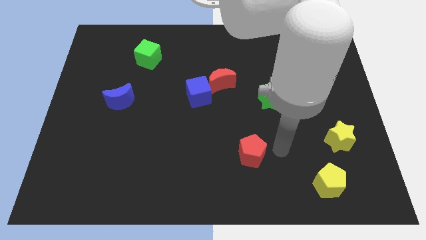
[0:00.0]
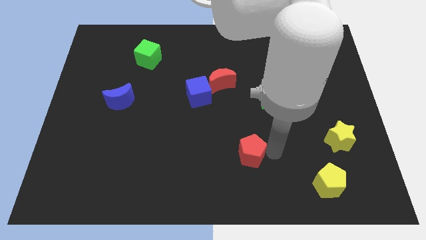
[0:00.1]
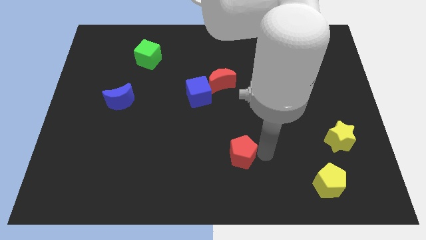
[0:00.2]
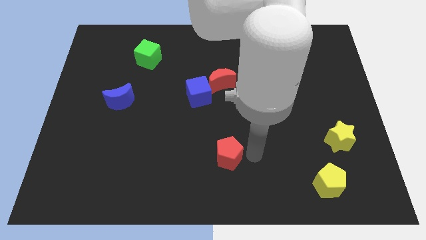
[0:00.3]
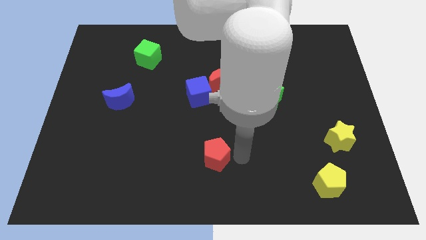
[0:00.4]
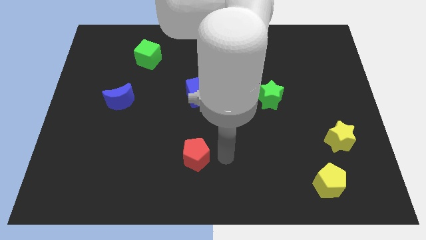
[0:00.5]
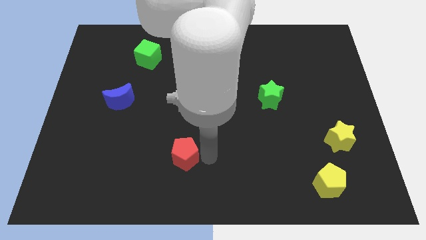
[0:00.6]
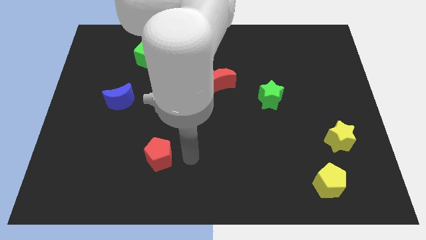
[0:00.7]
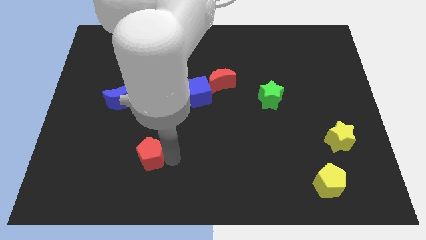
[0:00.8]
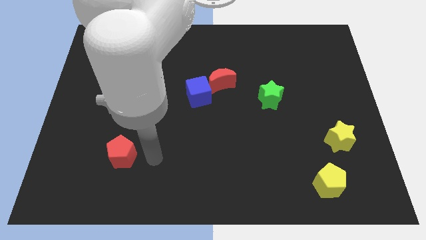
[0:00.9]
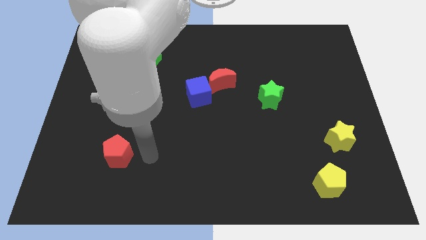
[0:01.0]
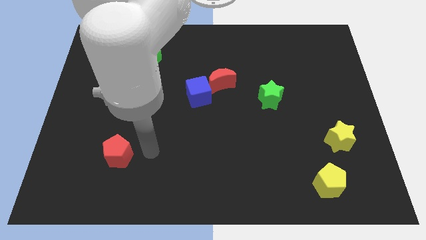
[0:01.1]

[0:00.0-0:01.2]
slide red pentagon below blue moon

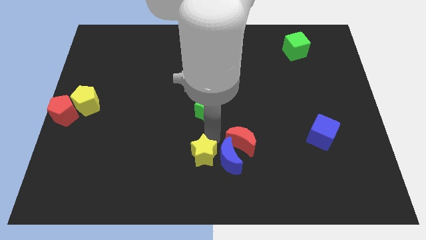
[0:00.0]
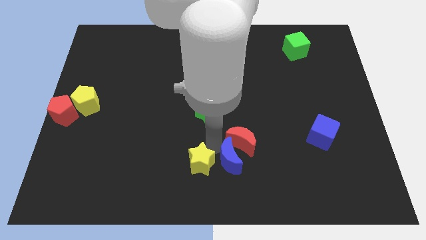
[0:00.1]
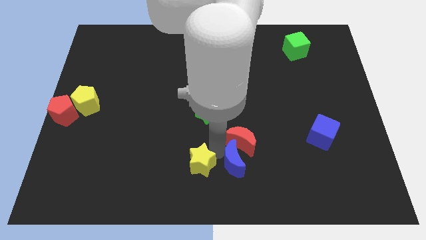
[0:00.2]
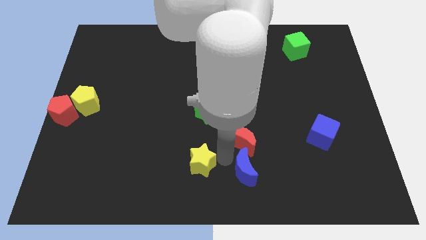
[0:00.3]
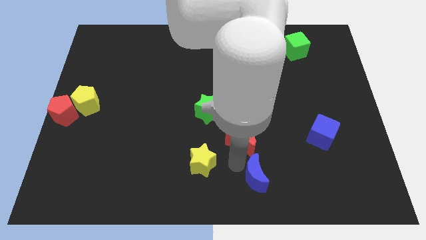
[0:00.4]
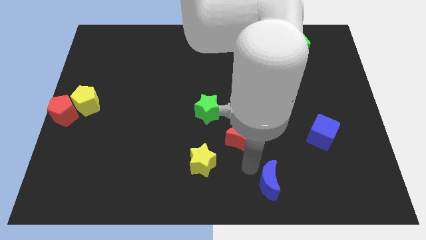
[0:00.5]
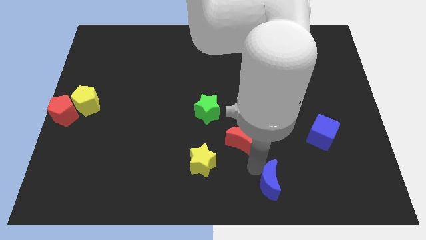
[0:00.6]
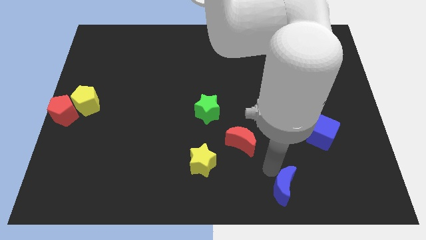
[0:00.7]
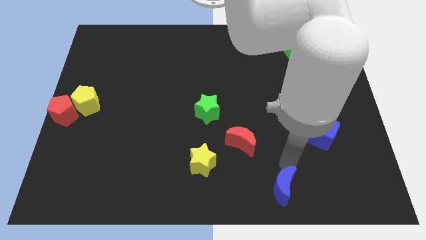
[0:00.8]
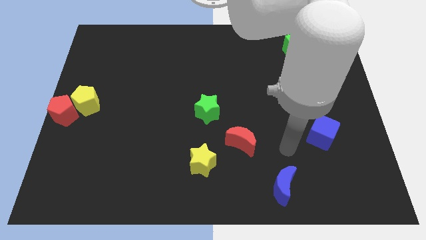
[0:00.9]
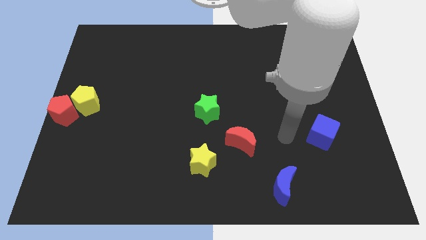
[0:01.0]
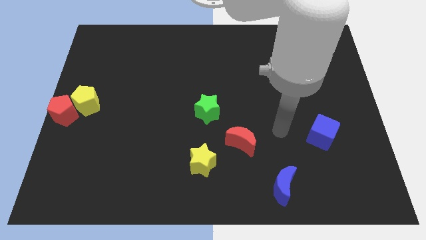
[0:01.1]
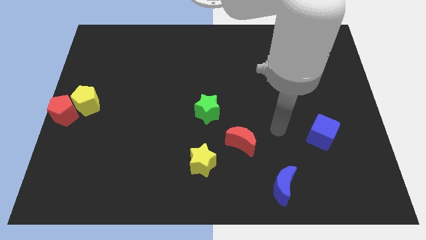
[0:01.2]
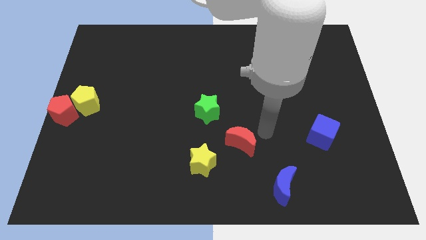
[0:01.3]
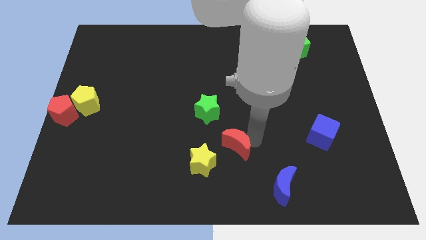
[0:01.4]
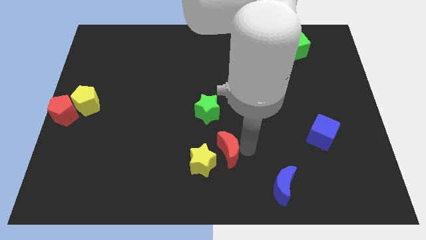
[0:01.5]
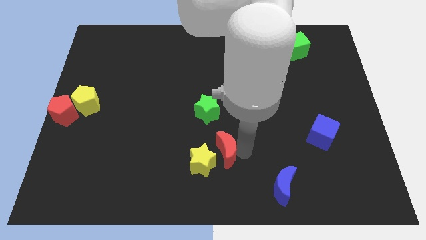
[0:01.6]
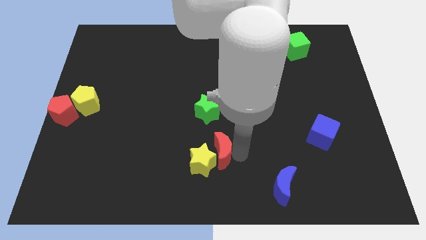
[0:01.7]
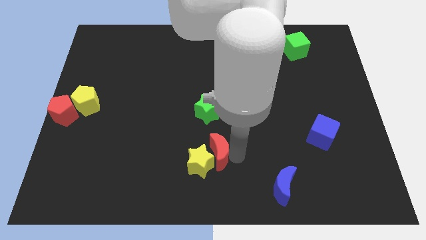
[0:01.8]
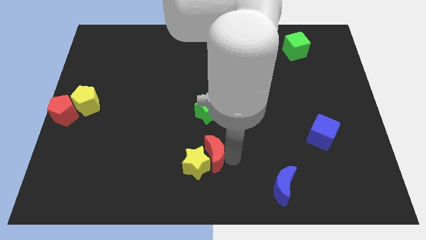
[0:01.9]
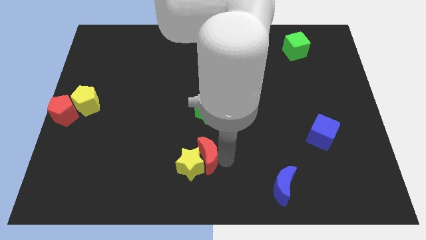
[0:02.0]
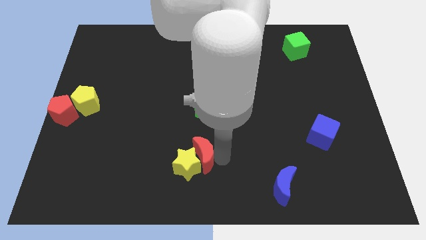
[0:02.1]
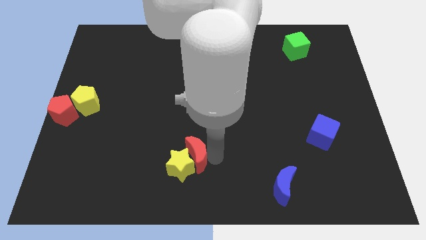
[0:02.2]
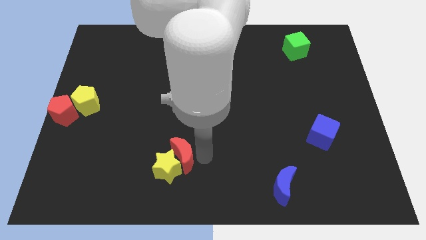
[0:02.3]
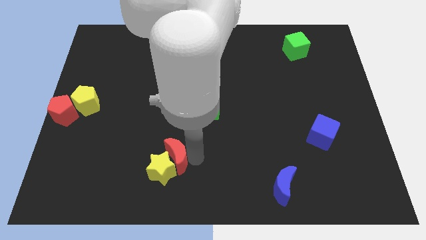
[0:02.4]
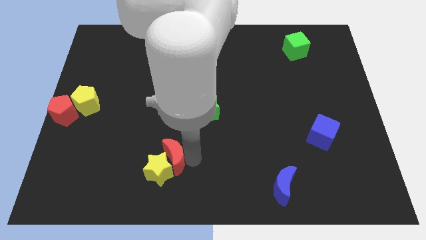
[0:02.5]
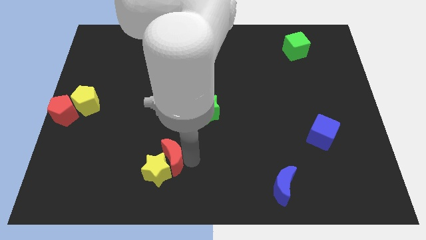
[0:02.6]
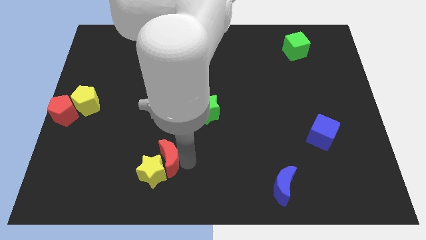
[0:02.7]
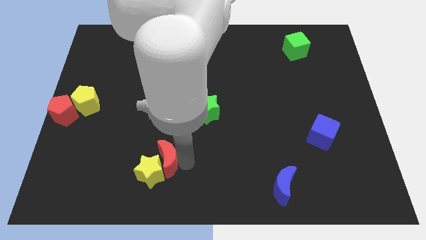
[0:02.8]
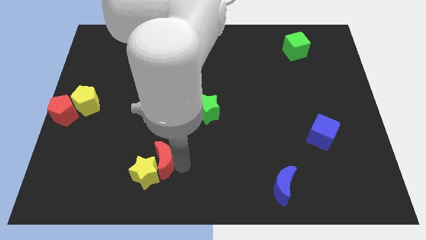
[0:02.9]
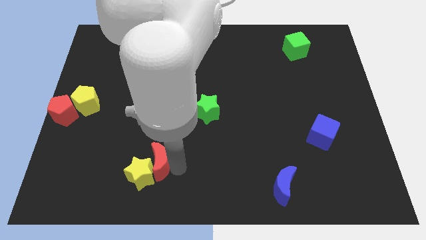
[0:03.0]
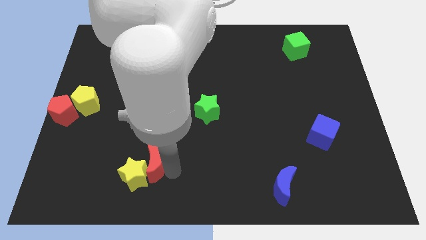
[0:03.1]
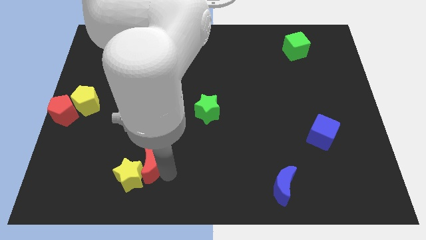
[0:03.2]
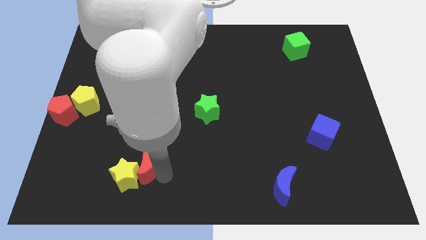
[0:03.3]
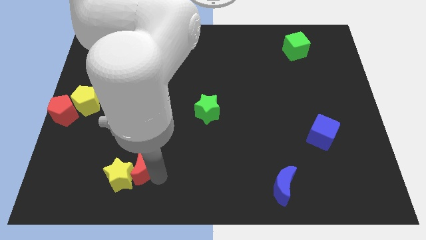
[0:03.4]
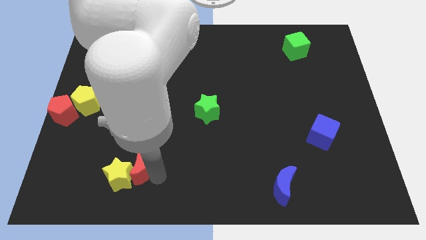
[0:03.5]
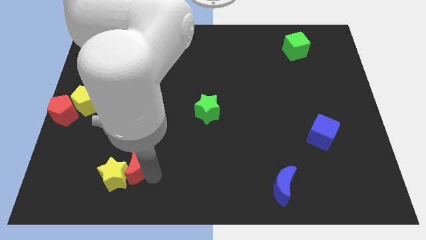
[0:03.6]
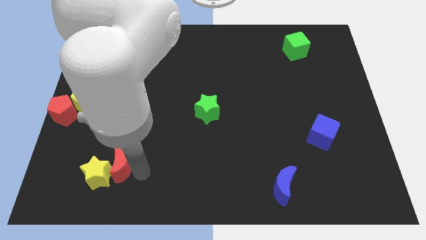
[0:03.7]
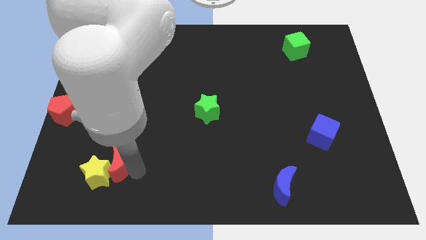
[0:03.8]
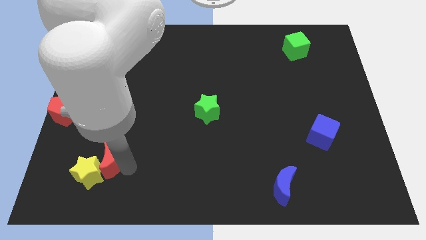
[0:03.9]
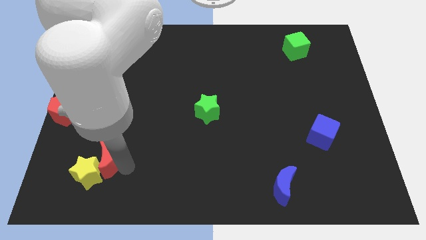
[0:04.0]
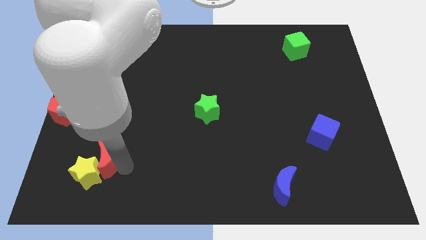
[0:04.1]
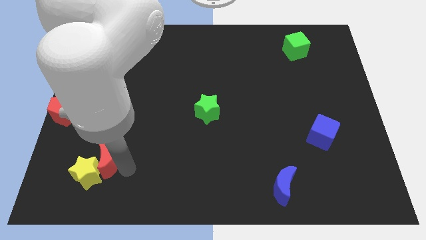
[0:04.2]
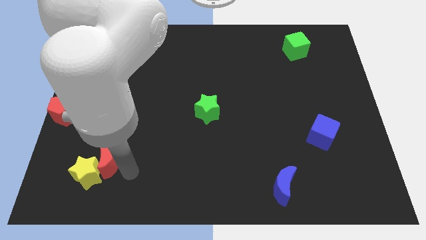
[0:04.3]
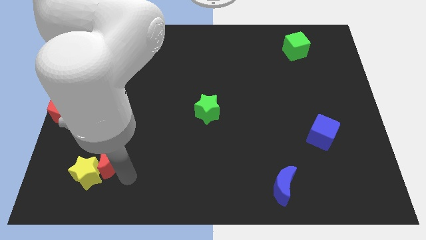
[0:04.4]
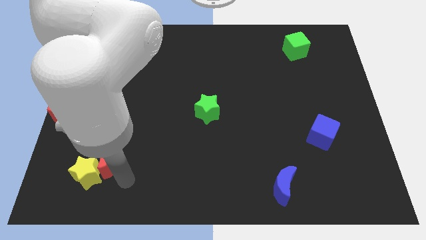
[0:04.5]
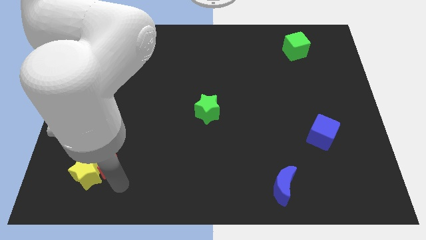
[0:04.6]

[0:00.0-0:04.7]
push the red moon into the yellow star

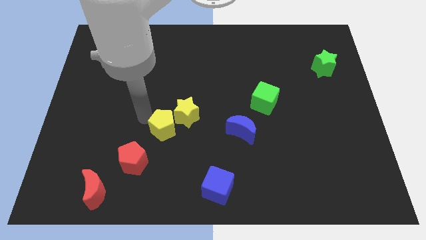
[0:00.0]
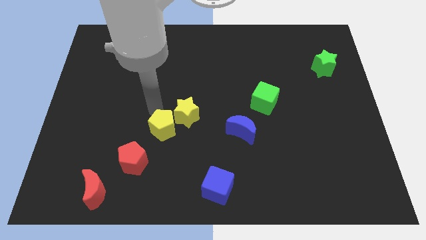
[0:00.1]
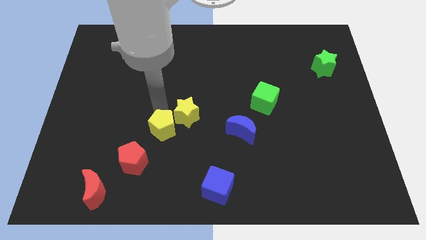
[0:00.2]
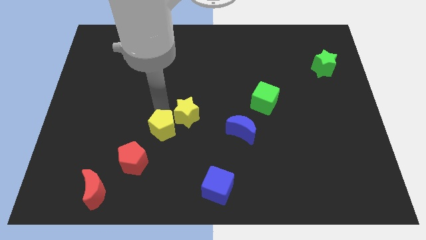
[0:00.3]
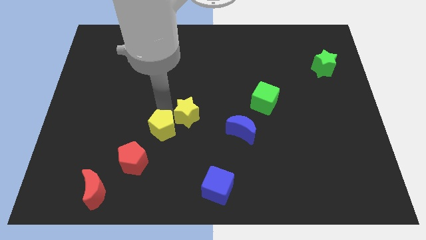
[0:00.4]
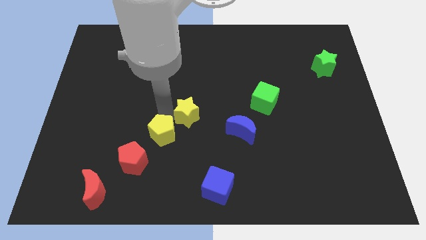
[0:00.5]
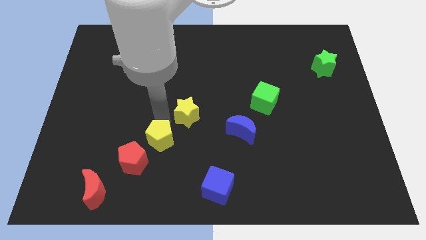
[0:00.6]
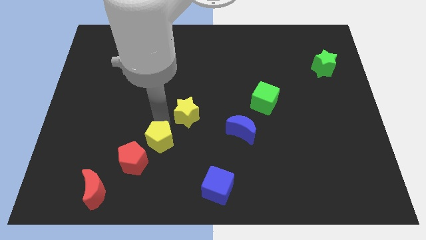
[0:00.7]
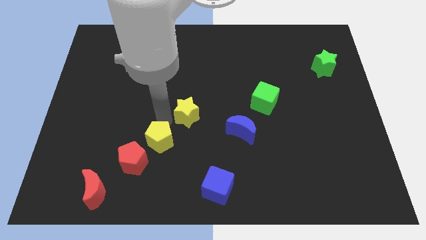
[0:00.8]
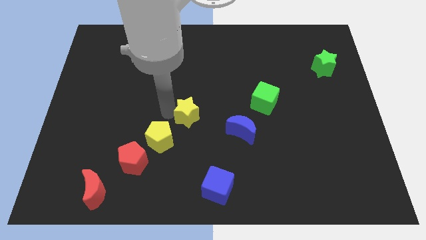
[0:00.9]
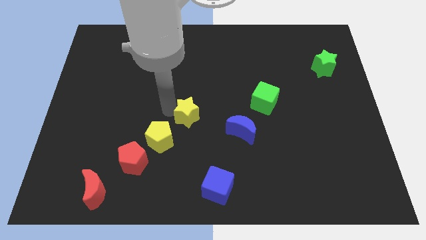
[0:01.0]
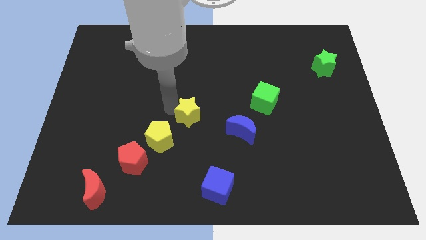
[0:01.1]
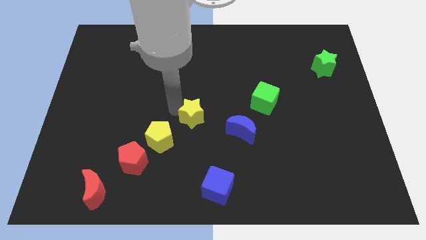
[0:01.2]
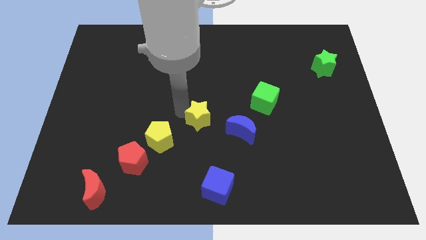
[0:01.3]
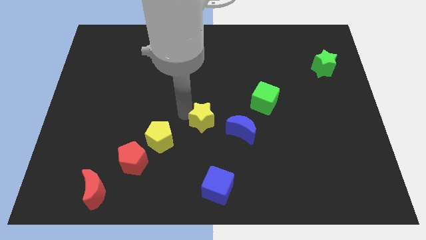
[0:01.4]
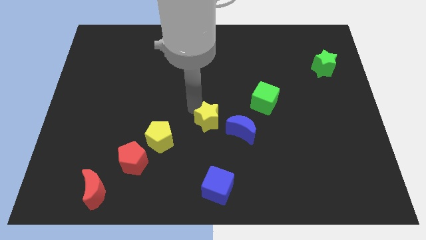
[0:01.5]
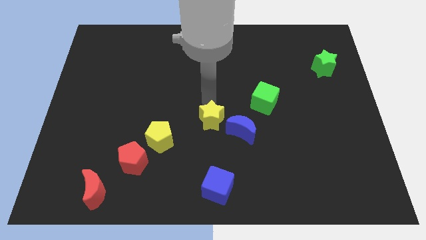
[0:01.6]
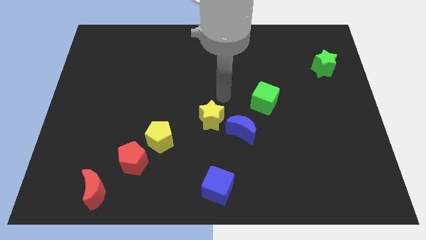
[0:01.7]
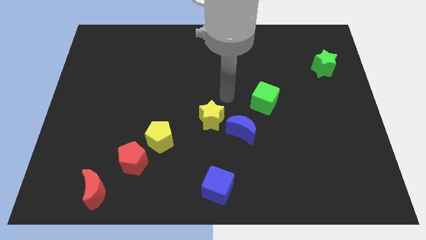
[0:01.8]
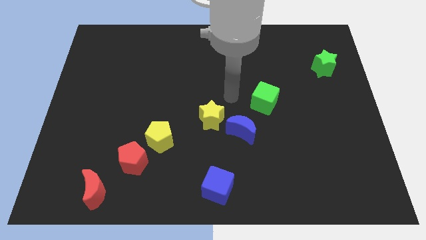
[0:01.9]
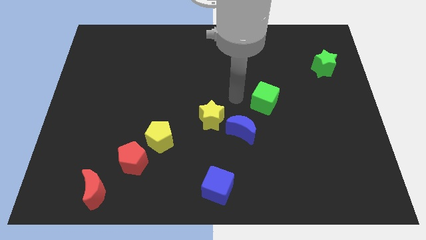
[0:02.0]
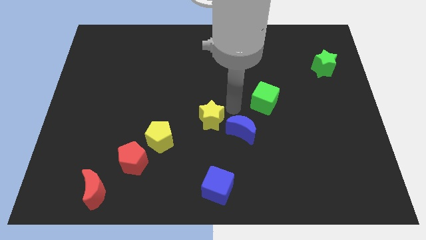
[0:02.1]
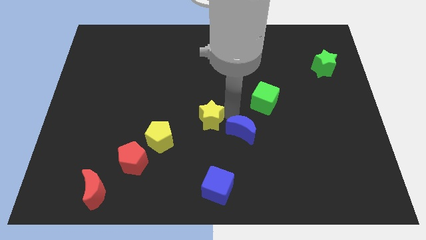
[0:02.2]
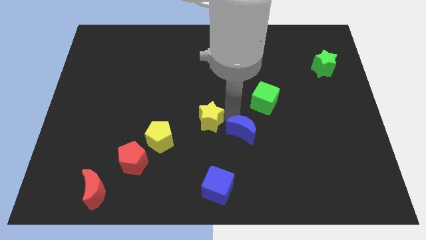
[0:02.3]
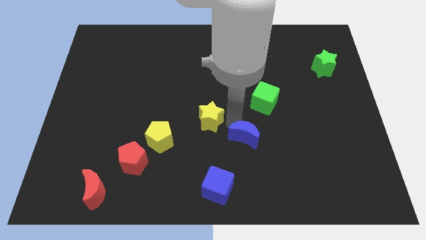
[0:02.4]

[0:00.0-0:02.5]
move the yellow star away from the yellow pentagon

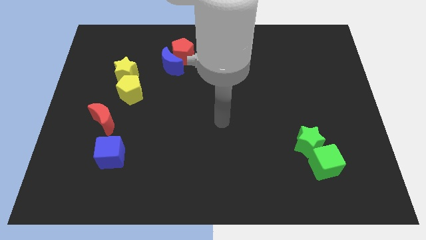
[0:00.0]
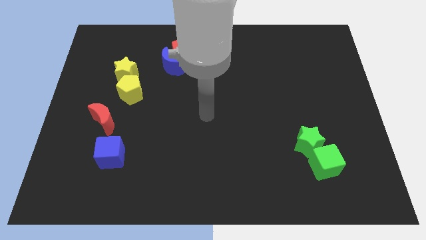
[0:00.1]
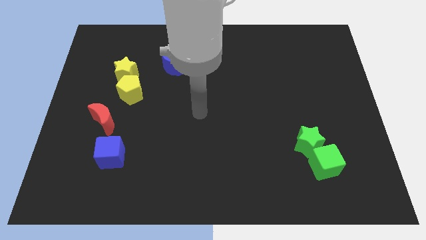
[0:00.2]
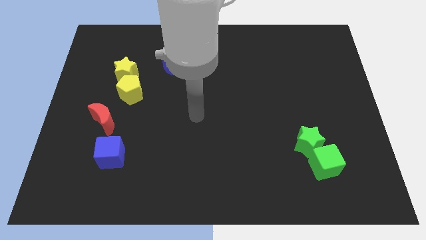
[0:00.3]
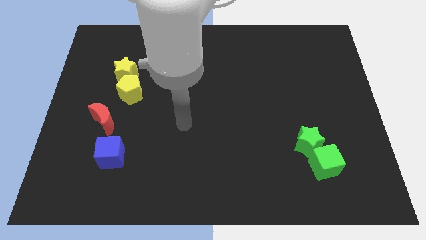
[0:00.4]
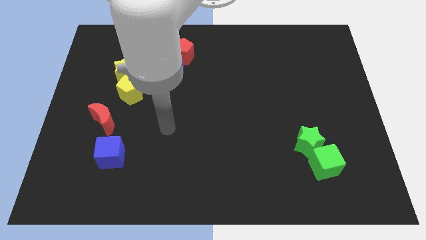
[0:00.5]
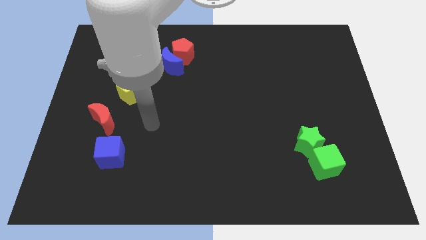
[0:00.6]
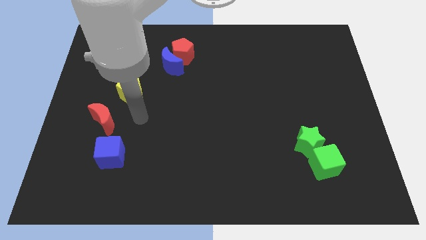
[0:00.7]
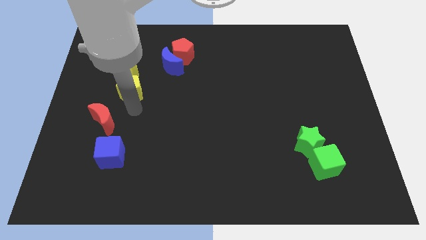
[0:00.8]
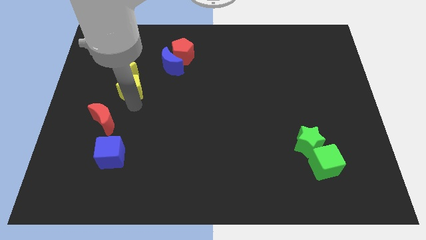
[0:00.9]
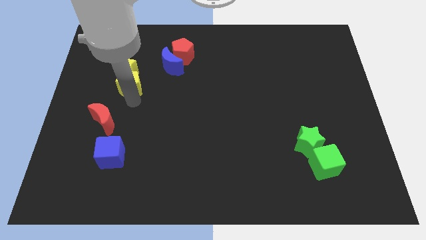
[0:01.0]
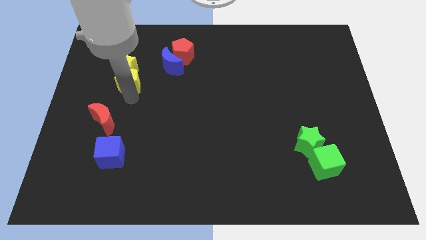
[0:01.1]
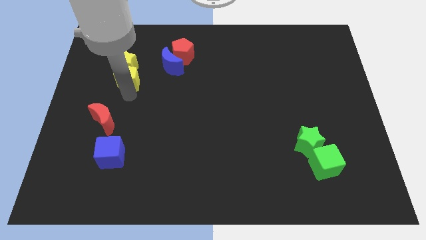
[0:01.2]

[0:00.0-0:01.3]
touch the yellow pentagon
